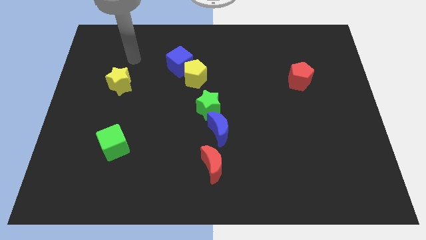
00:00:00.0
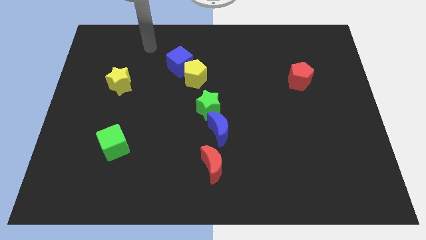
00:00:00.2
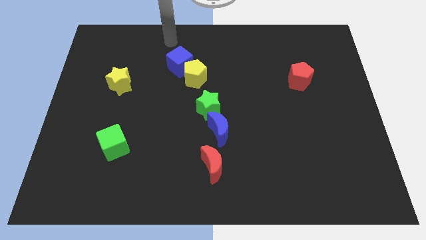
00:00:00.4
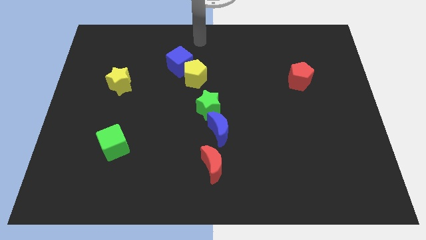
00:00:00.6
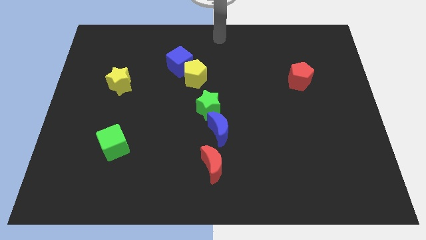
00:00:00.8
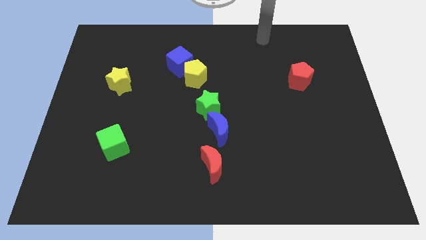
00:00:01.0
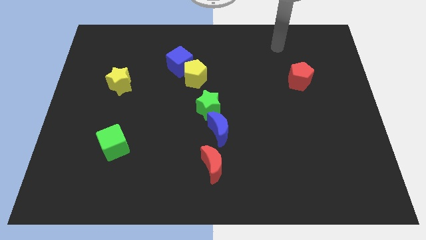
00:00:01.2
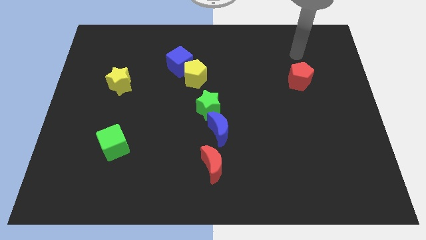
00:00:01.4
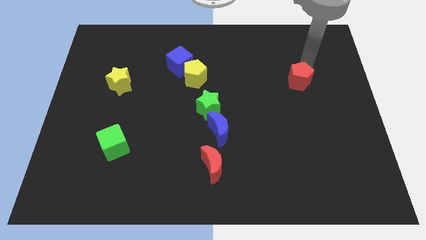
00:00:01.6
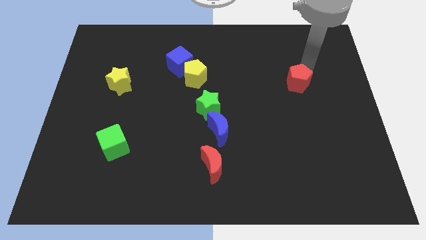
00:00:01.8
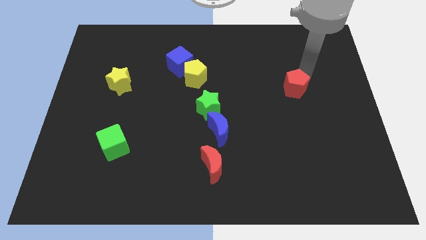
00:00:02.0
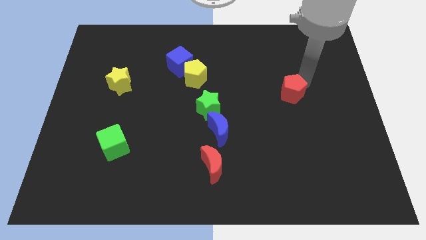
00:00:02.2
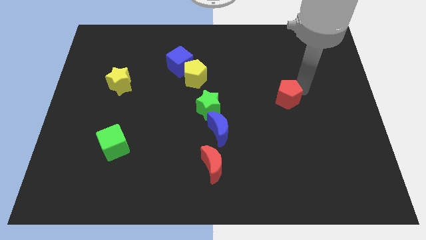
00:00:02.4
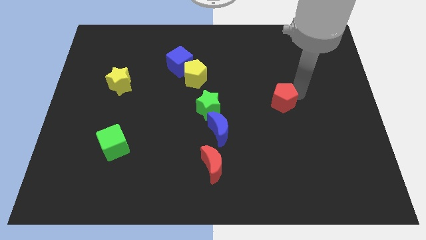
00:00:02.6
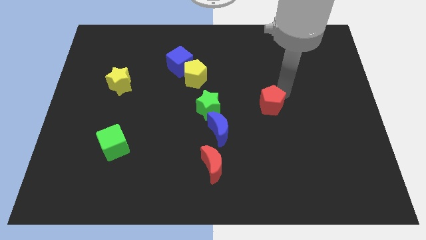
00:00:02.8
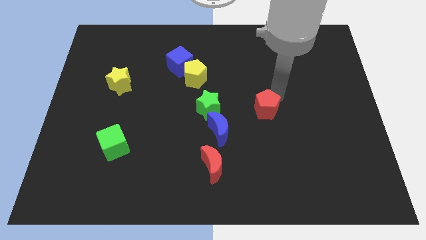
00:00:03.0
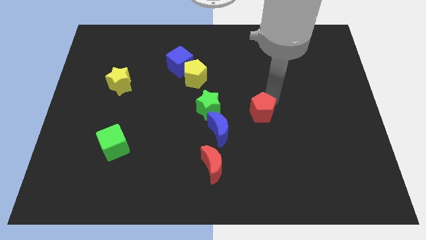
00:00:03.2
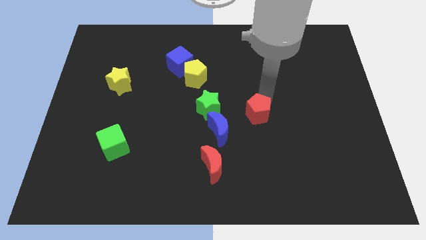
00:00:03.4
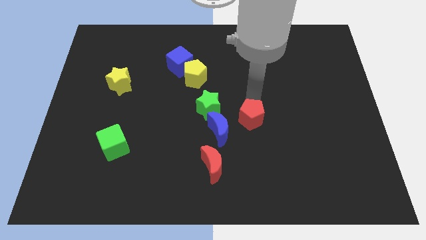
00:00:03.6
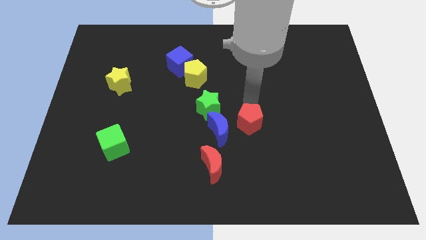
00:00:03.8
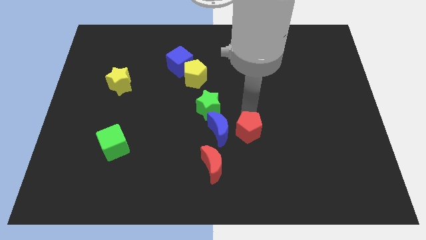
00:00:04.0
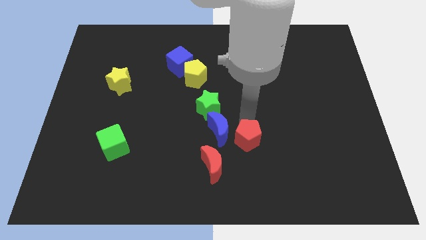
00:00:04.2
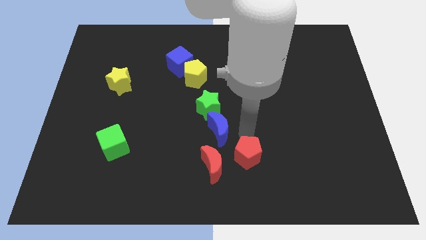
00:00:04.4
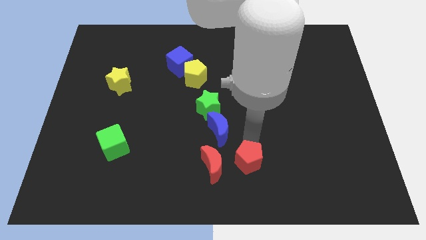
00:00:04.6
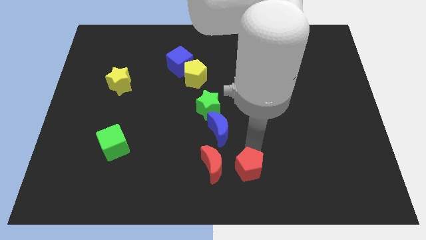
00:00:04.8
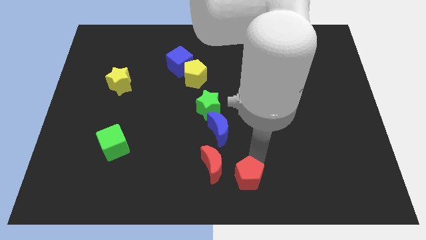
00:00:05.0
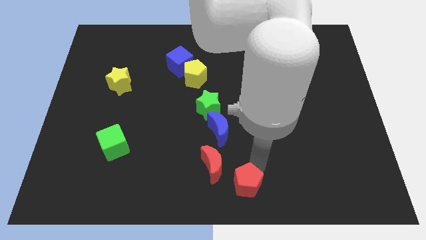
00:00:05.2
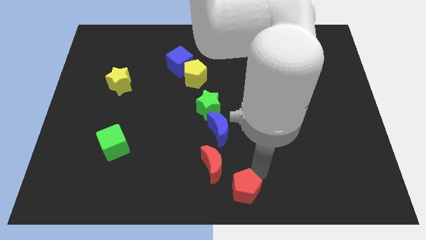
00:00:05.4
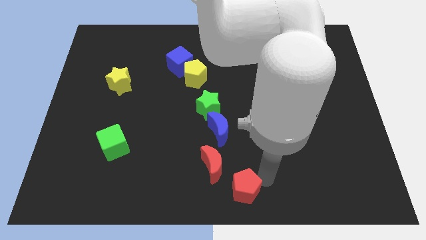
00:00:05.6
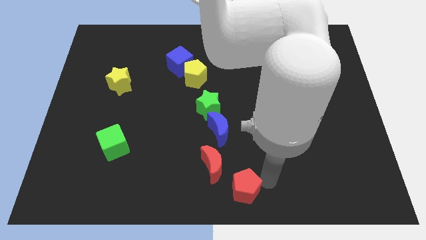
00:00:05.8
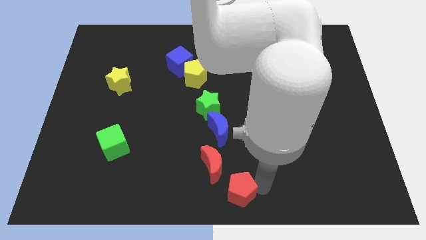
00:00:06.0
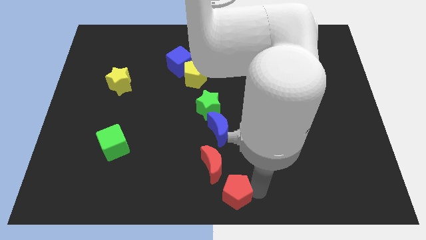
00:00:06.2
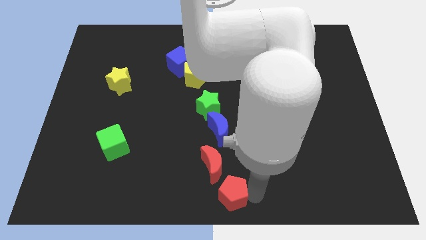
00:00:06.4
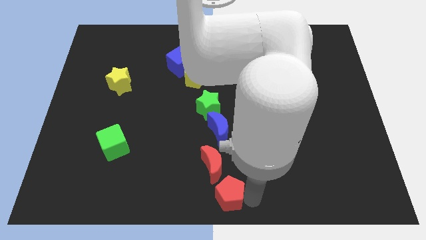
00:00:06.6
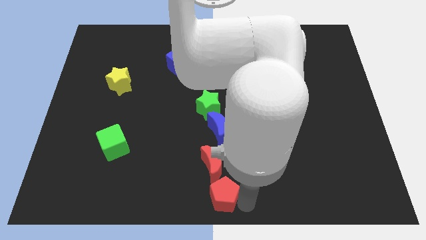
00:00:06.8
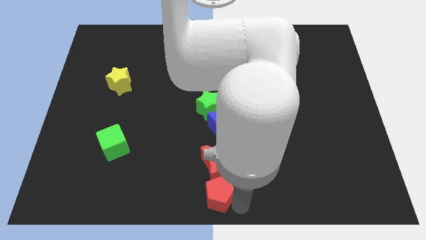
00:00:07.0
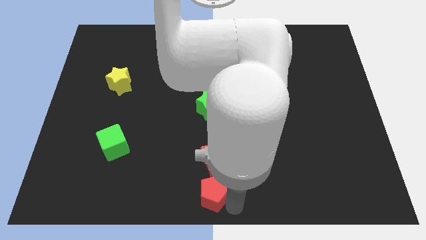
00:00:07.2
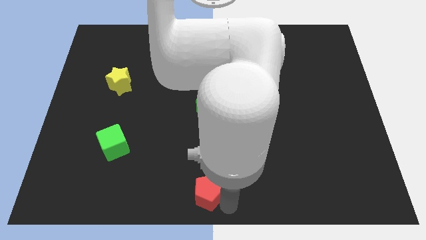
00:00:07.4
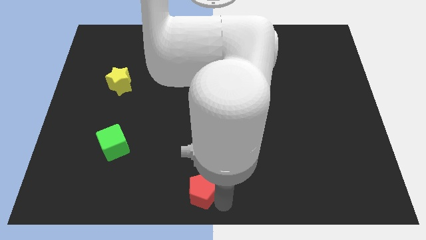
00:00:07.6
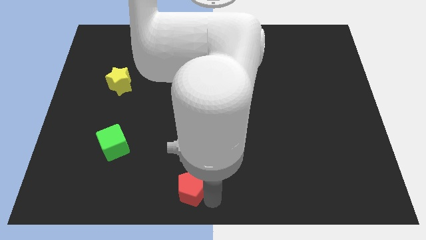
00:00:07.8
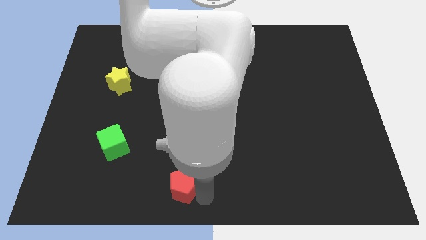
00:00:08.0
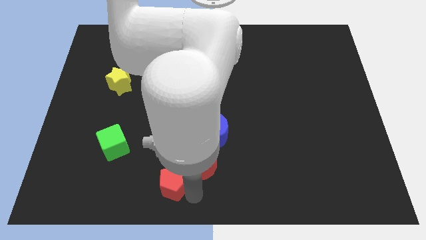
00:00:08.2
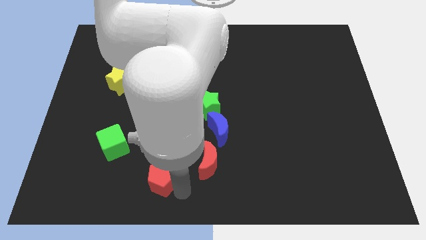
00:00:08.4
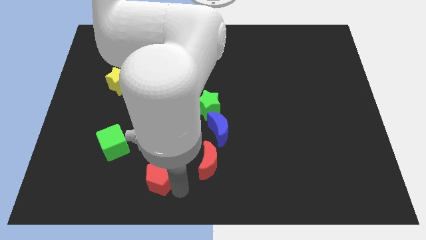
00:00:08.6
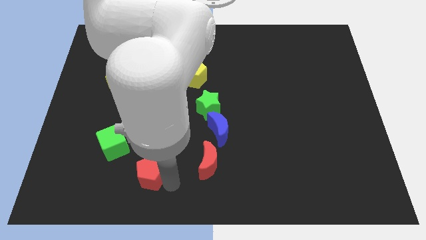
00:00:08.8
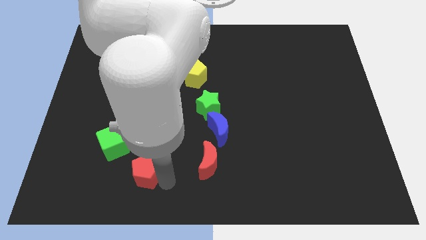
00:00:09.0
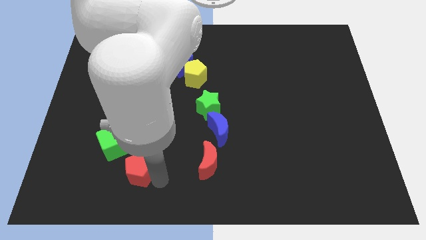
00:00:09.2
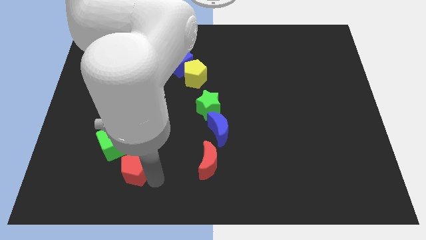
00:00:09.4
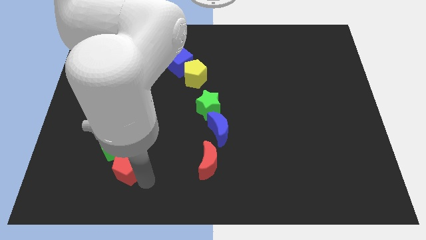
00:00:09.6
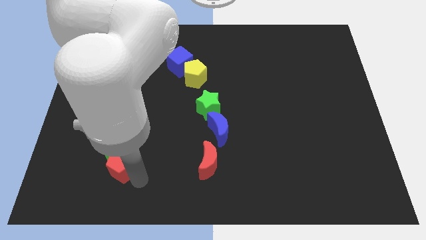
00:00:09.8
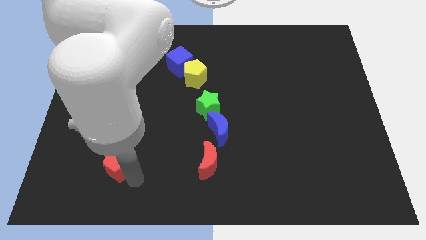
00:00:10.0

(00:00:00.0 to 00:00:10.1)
push the red pentagon to the green cube

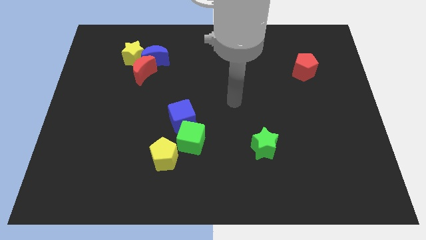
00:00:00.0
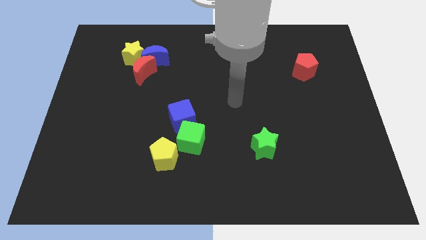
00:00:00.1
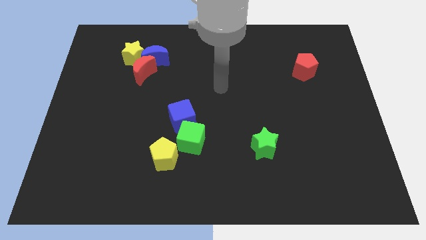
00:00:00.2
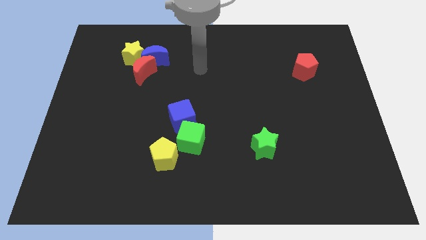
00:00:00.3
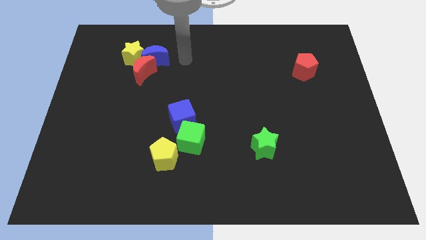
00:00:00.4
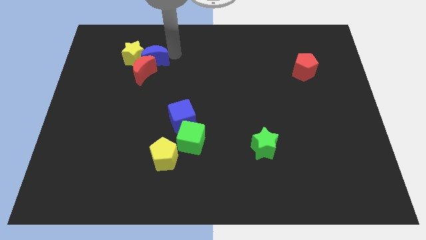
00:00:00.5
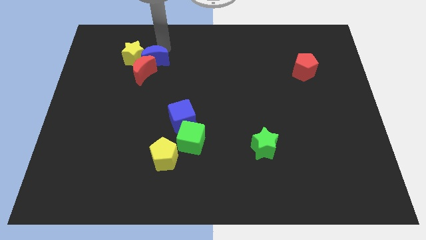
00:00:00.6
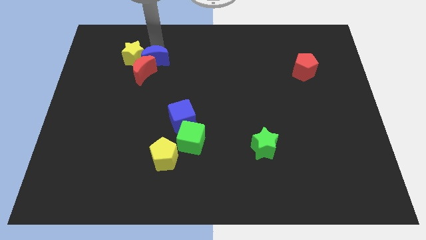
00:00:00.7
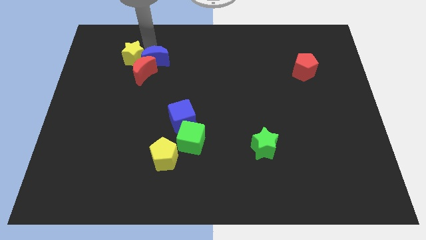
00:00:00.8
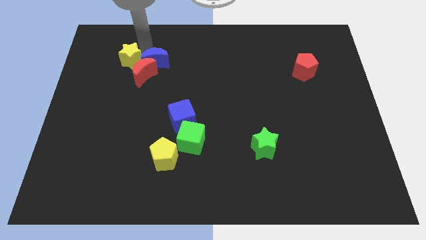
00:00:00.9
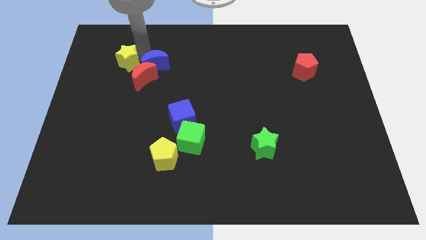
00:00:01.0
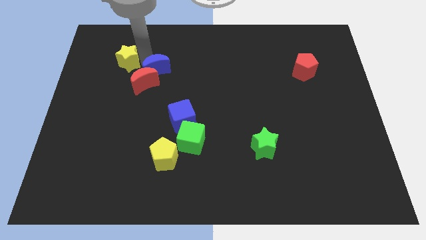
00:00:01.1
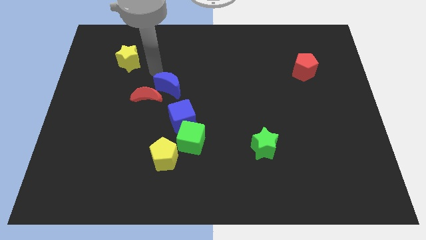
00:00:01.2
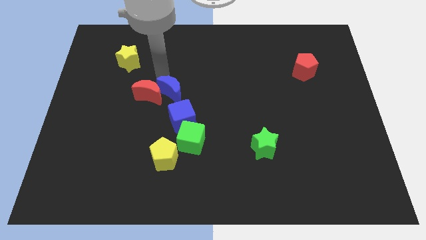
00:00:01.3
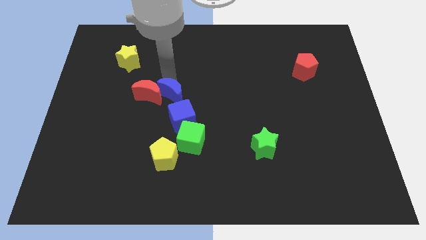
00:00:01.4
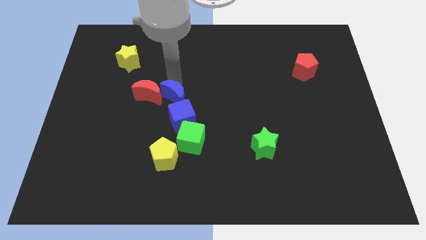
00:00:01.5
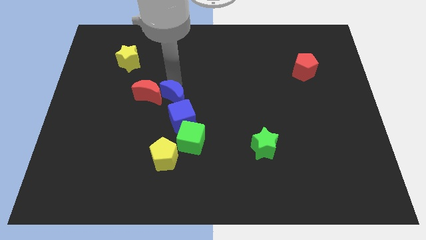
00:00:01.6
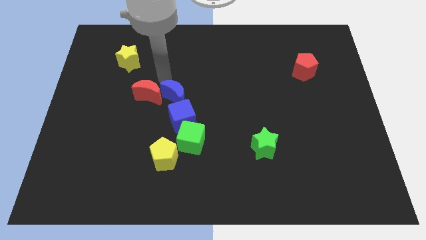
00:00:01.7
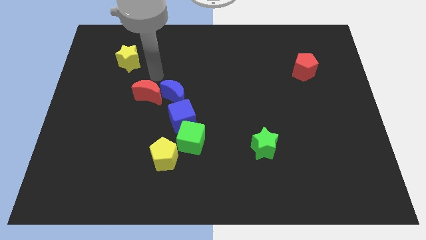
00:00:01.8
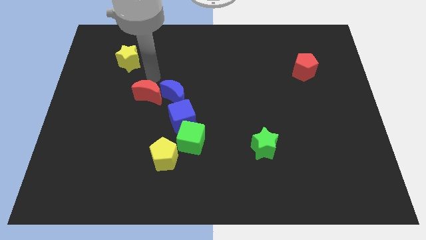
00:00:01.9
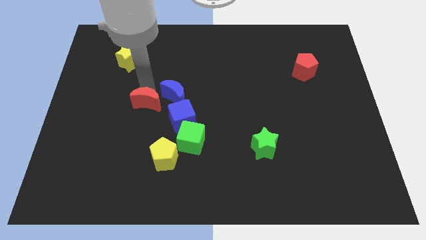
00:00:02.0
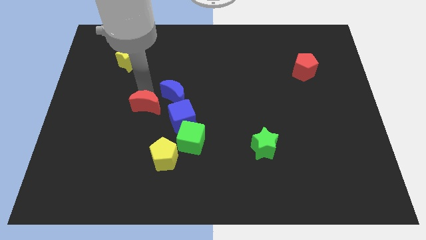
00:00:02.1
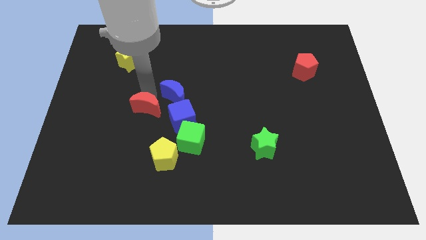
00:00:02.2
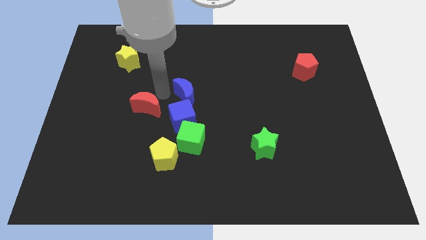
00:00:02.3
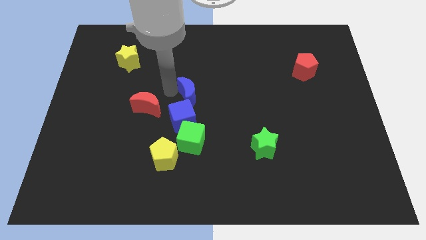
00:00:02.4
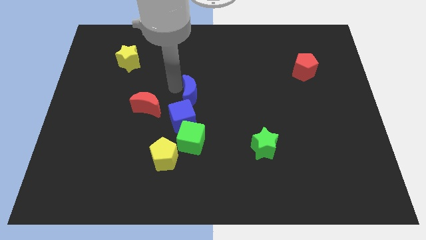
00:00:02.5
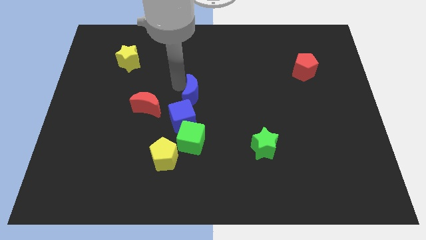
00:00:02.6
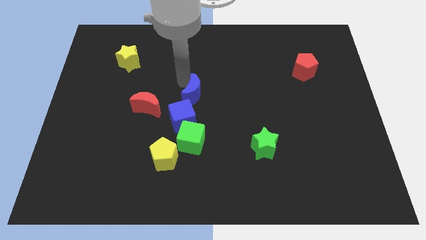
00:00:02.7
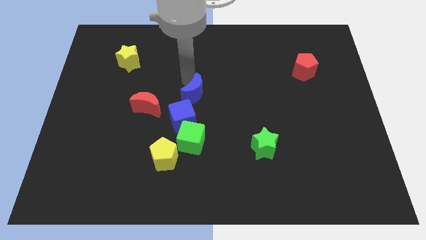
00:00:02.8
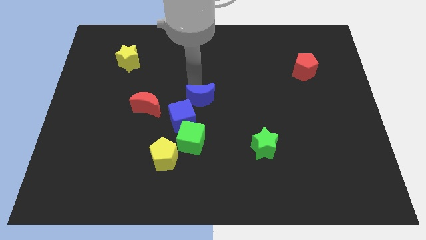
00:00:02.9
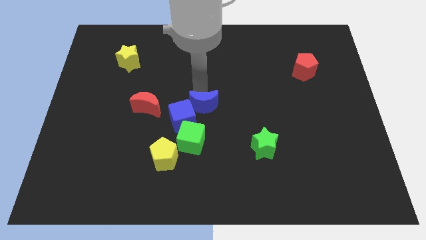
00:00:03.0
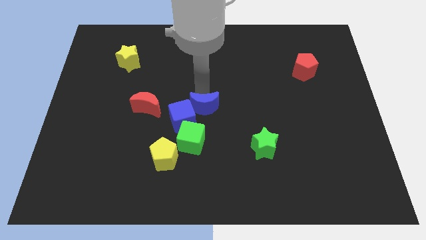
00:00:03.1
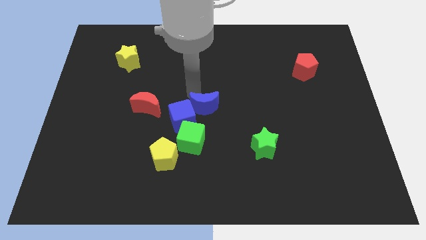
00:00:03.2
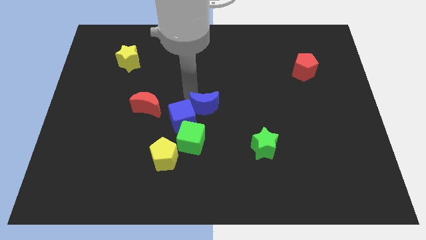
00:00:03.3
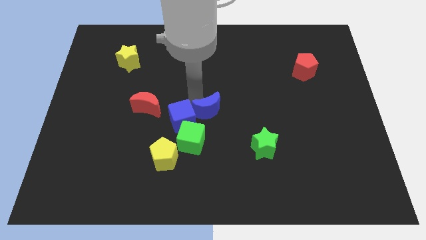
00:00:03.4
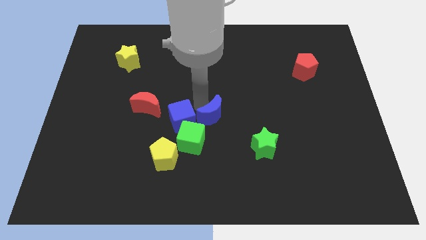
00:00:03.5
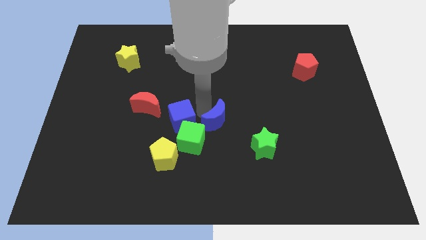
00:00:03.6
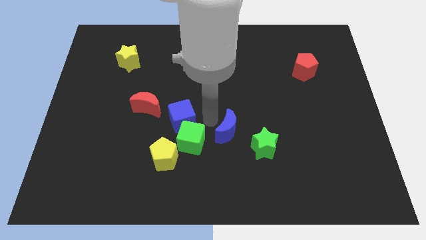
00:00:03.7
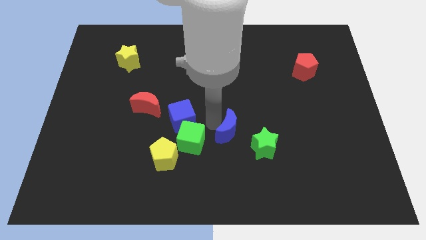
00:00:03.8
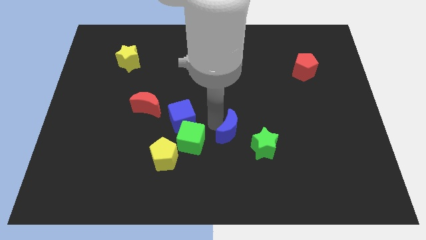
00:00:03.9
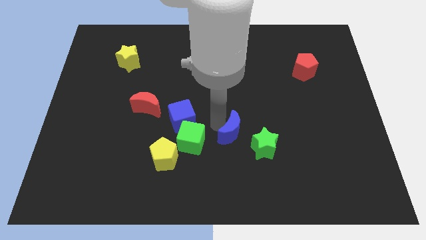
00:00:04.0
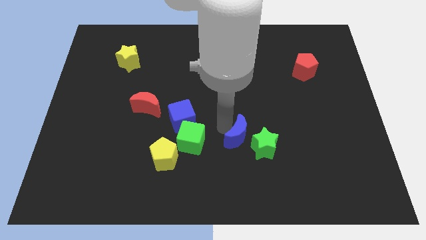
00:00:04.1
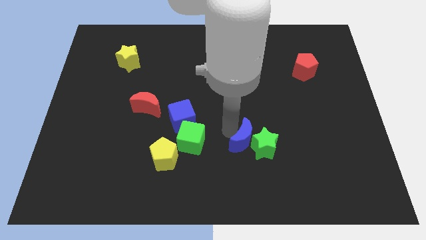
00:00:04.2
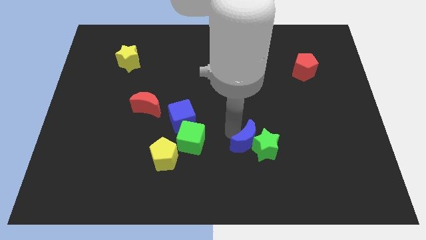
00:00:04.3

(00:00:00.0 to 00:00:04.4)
push the blue moon towards the green star
